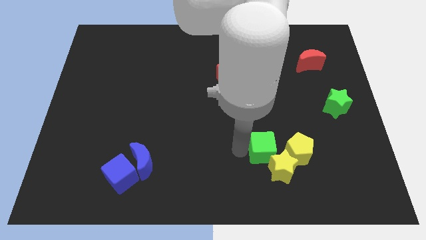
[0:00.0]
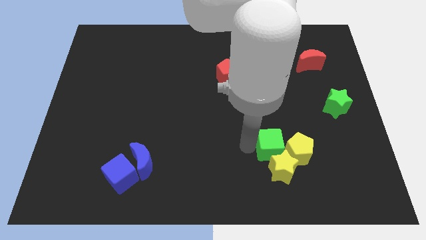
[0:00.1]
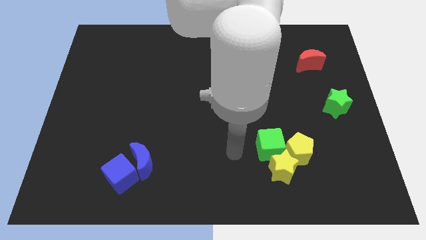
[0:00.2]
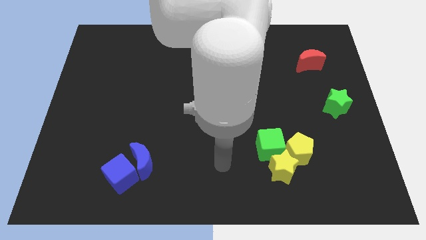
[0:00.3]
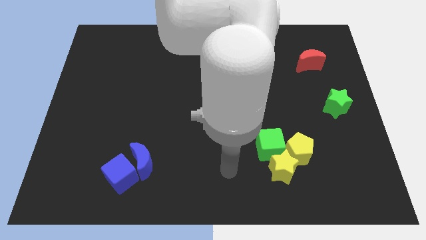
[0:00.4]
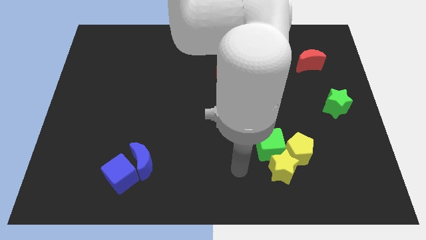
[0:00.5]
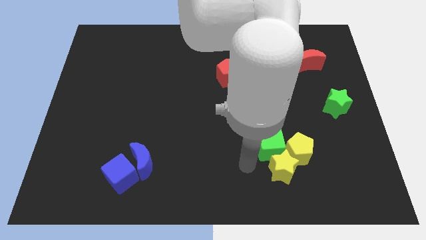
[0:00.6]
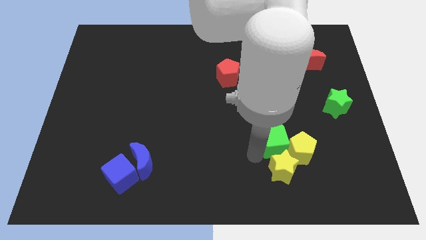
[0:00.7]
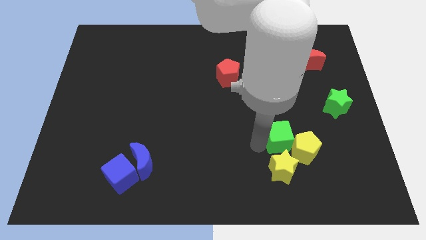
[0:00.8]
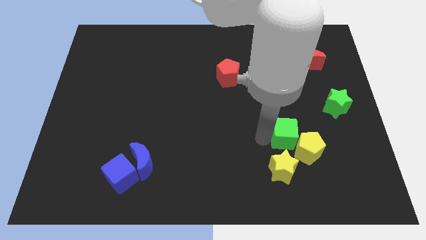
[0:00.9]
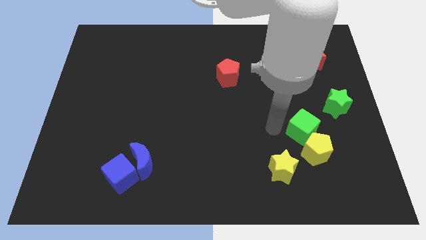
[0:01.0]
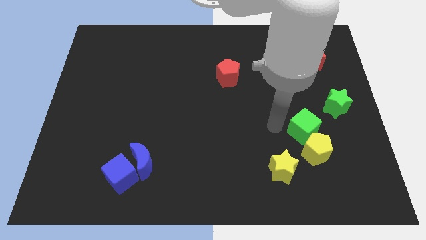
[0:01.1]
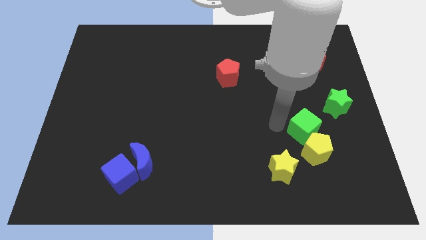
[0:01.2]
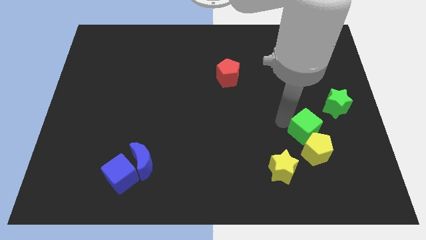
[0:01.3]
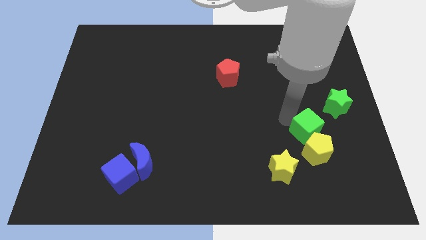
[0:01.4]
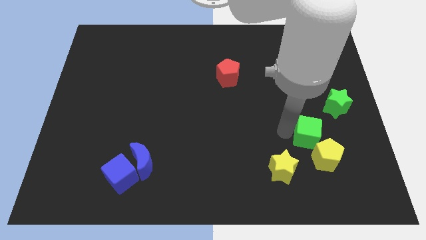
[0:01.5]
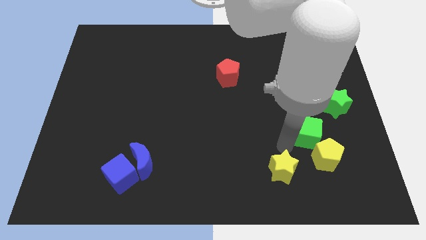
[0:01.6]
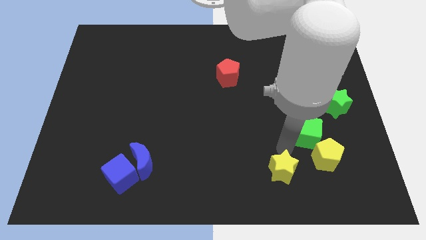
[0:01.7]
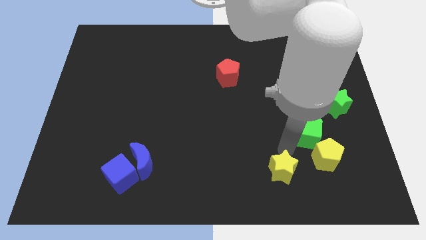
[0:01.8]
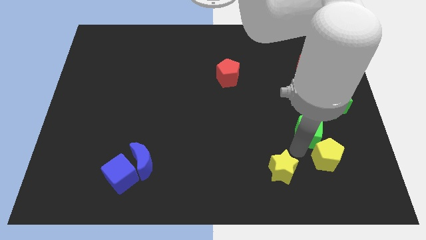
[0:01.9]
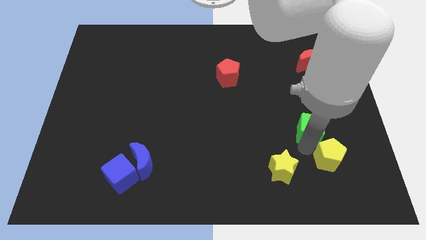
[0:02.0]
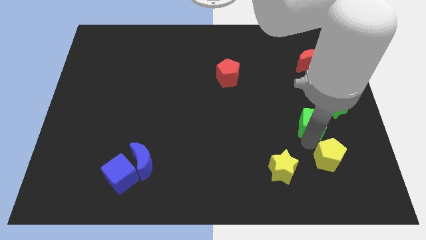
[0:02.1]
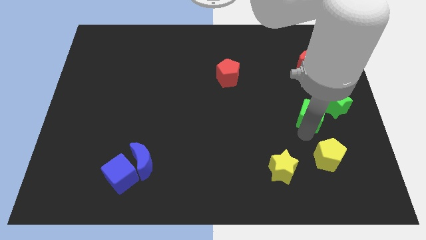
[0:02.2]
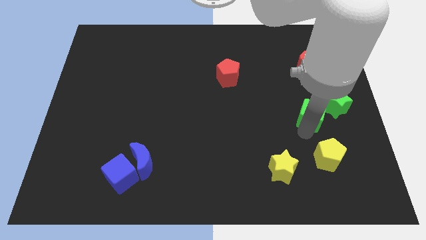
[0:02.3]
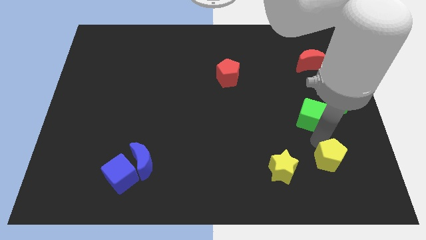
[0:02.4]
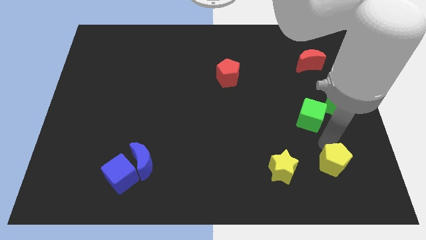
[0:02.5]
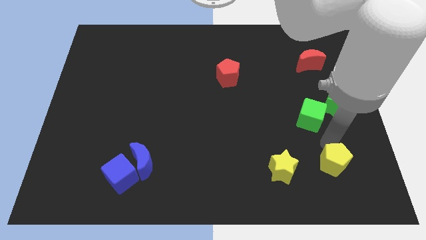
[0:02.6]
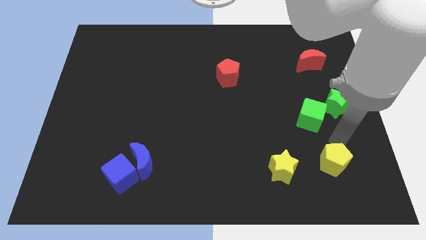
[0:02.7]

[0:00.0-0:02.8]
place tha green cube to the left bottom of green star

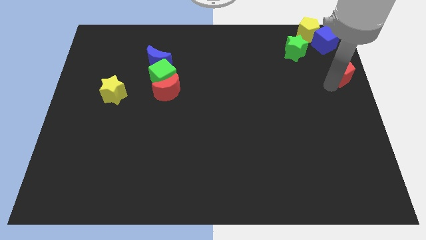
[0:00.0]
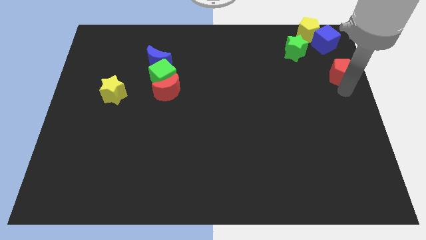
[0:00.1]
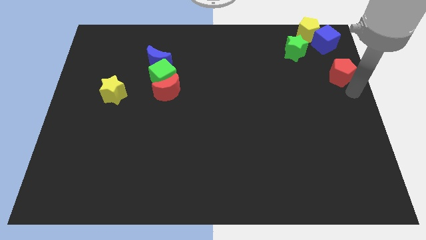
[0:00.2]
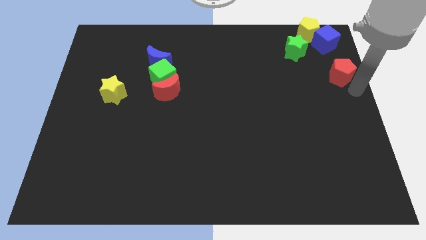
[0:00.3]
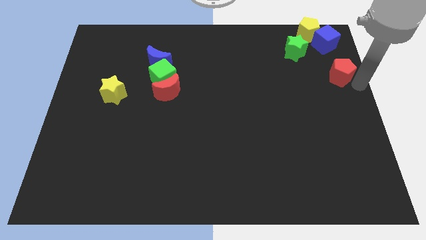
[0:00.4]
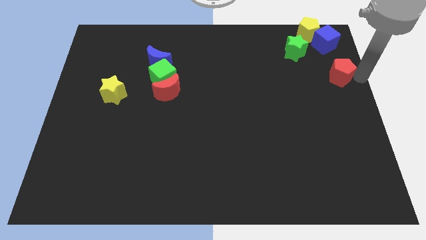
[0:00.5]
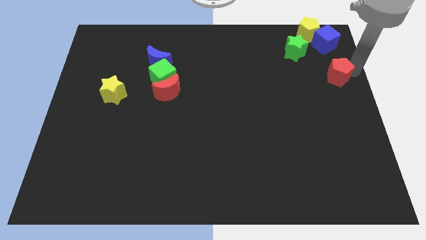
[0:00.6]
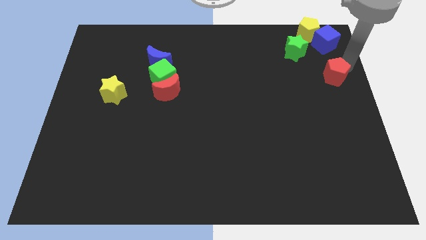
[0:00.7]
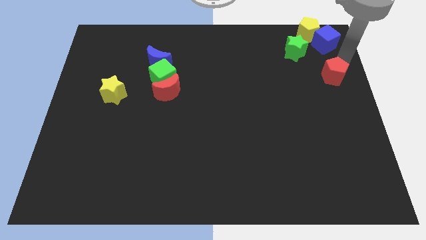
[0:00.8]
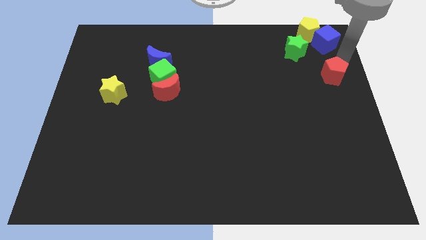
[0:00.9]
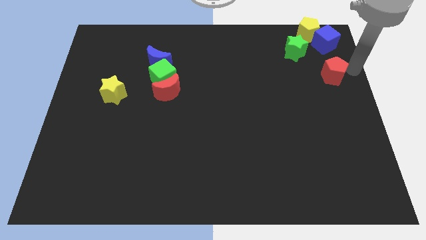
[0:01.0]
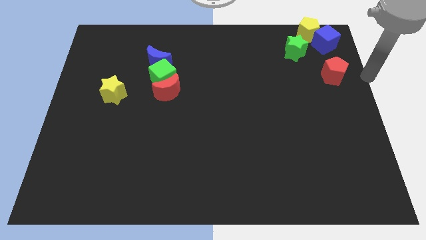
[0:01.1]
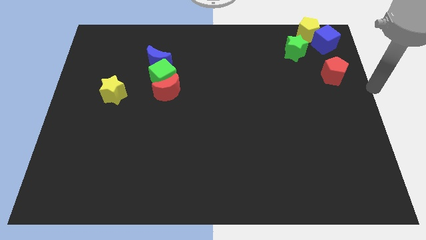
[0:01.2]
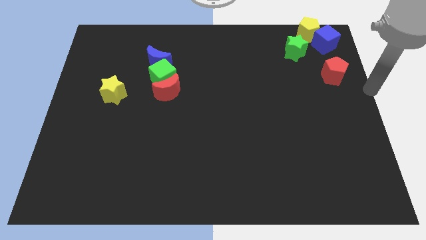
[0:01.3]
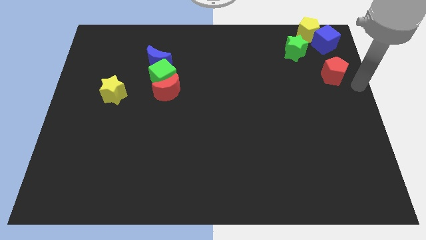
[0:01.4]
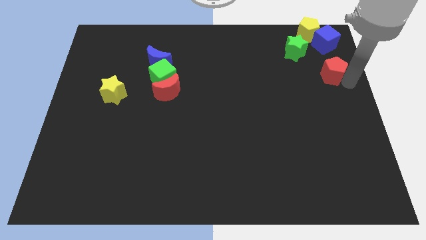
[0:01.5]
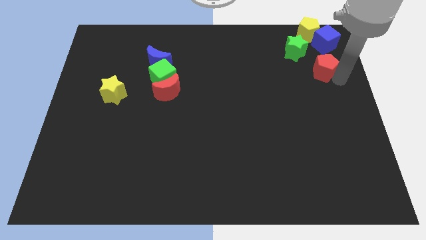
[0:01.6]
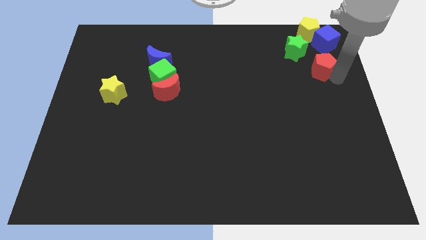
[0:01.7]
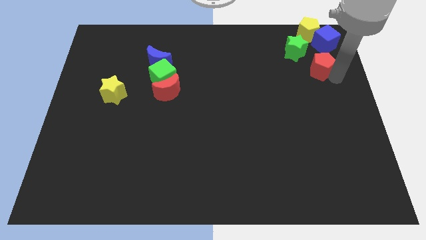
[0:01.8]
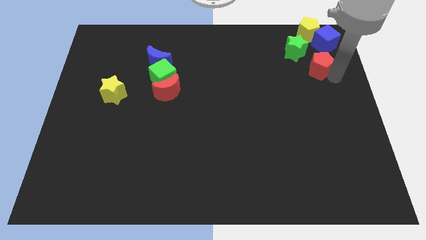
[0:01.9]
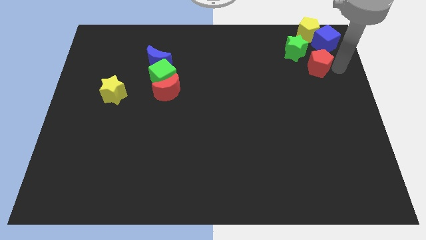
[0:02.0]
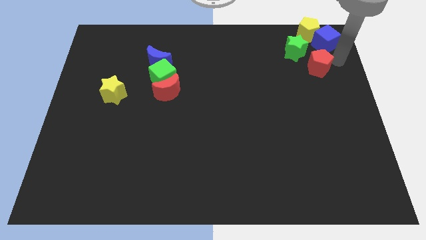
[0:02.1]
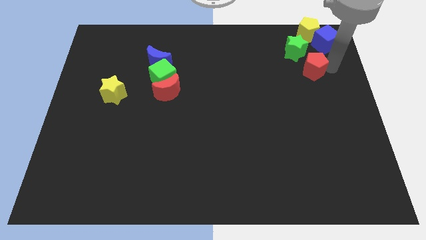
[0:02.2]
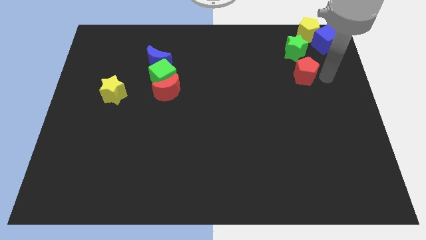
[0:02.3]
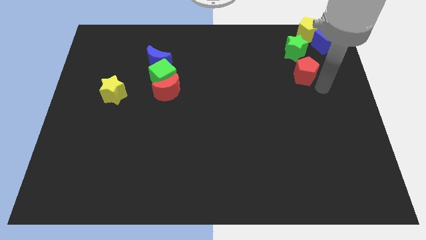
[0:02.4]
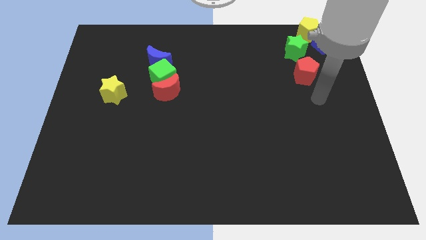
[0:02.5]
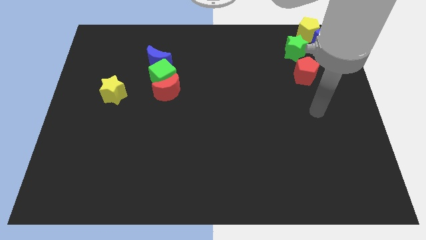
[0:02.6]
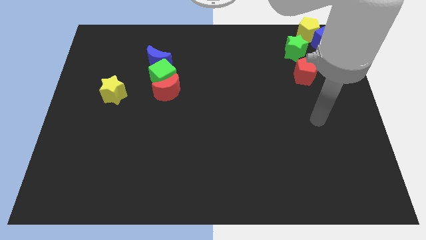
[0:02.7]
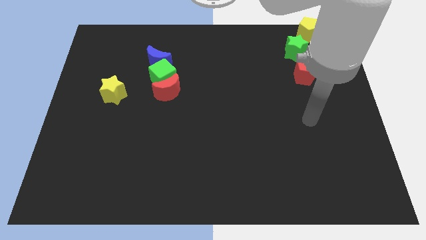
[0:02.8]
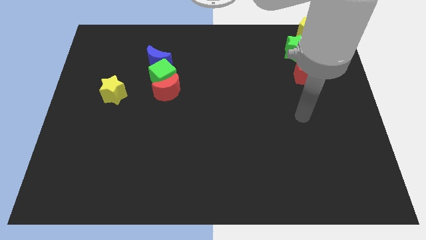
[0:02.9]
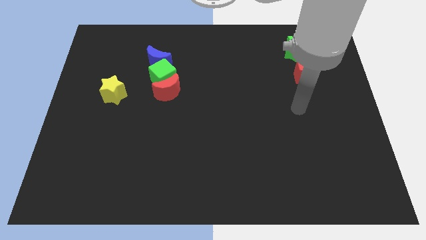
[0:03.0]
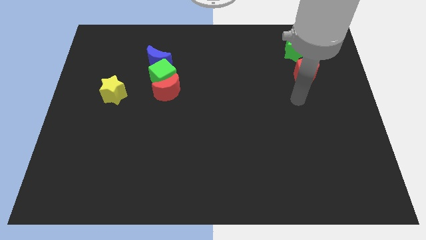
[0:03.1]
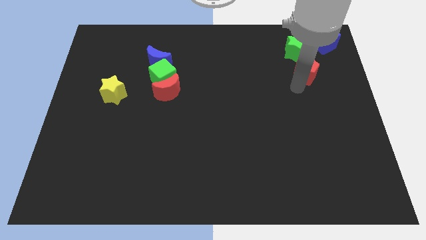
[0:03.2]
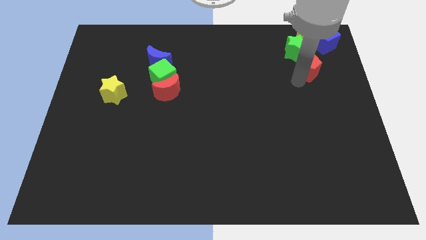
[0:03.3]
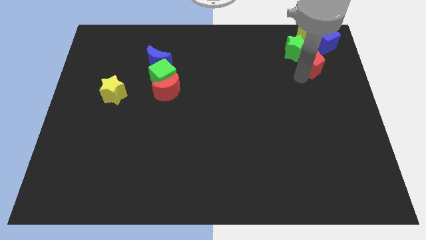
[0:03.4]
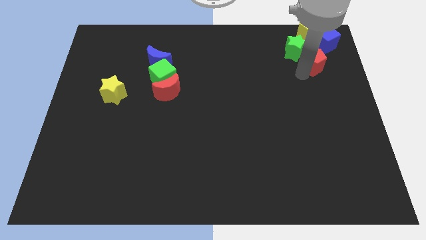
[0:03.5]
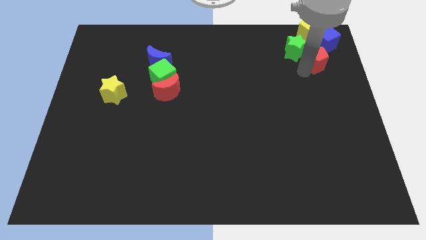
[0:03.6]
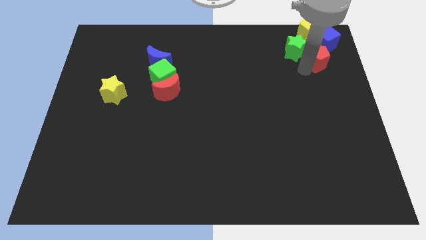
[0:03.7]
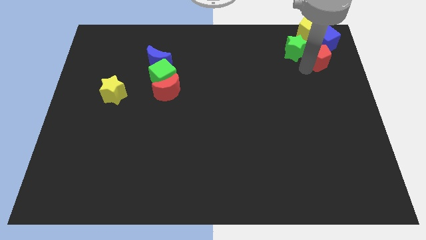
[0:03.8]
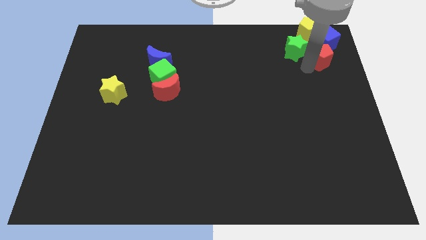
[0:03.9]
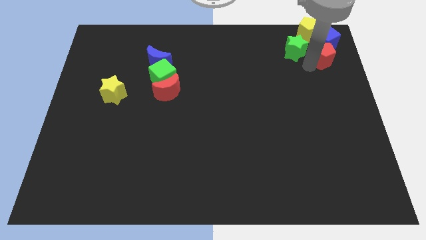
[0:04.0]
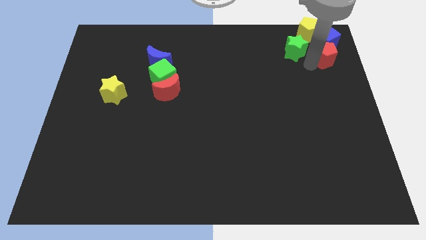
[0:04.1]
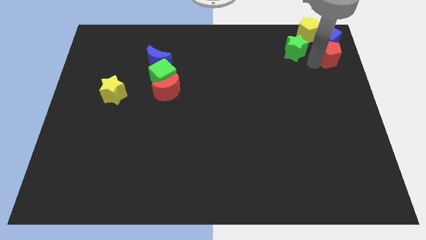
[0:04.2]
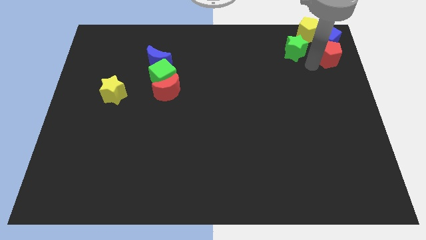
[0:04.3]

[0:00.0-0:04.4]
push the red pentagon in to the blue cube

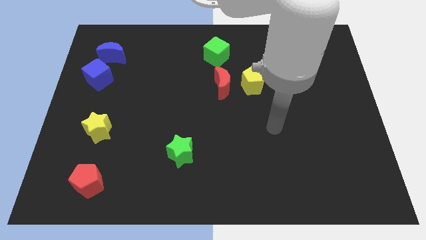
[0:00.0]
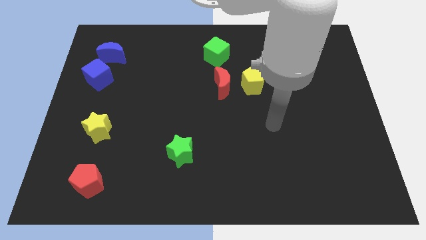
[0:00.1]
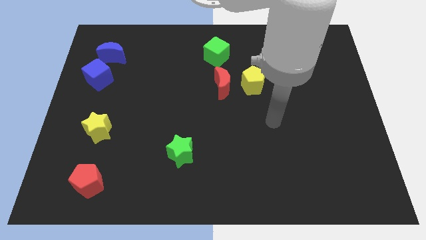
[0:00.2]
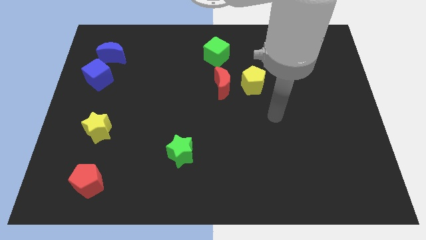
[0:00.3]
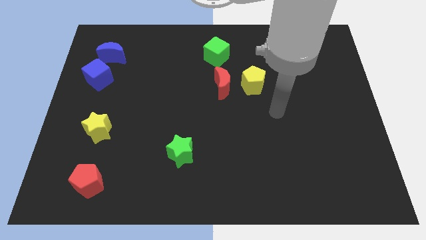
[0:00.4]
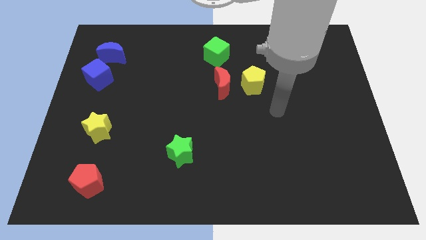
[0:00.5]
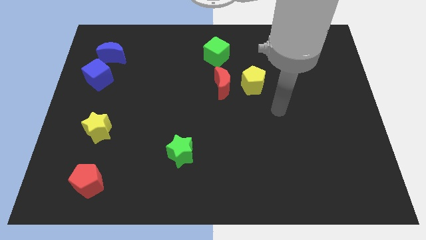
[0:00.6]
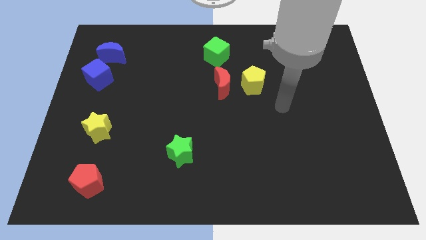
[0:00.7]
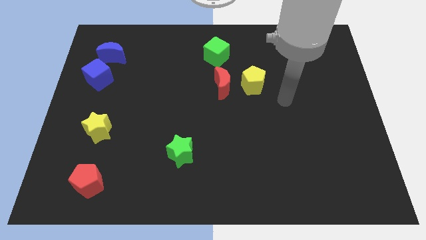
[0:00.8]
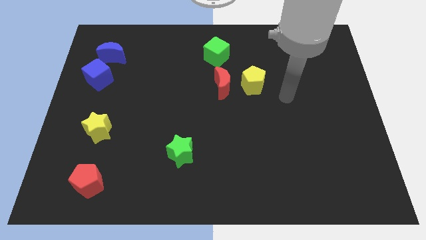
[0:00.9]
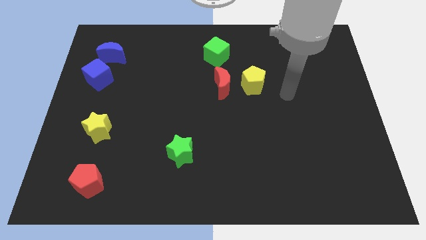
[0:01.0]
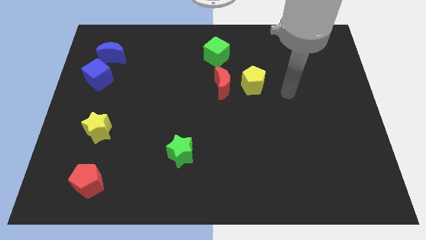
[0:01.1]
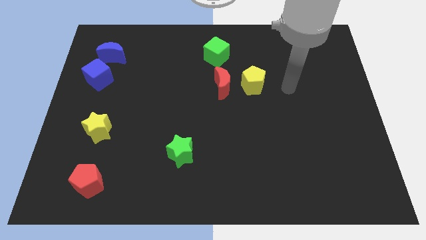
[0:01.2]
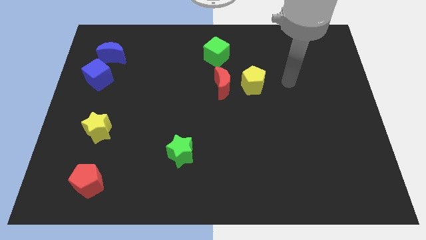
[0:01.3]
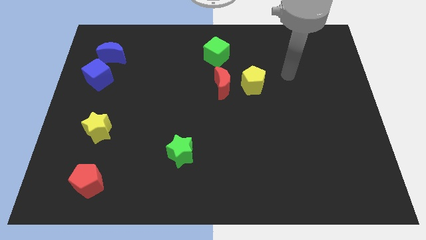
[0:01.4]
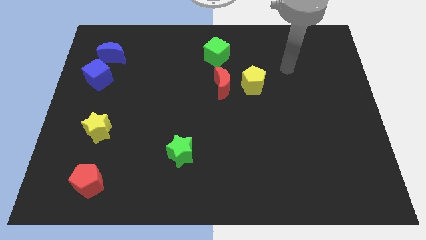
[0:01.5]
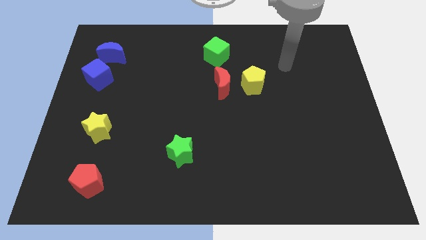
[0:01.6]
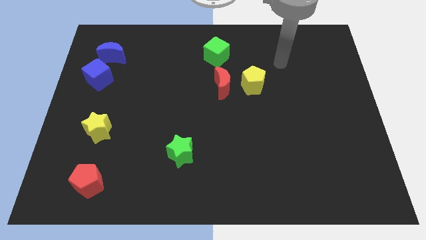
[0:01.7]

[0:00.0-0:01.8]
move your arm parallel to green cube
